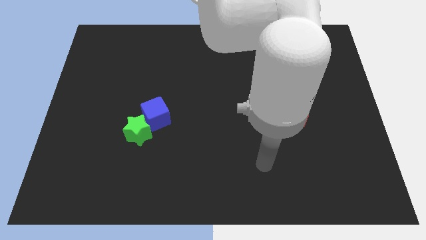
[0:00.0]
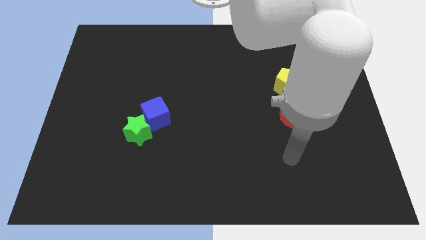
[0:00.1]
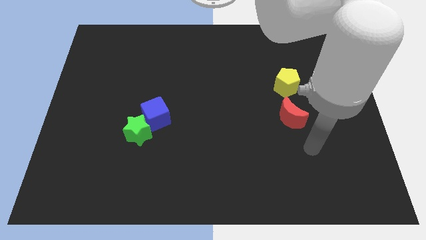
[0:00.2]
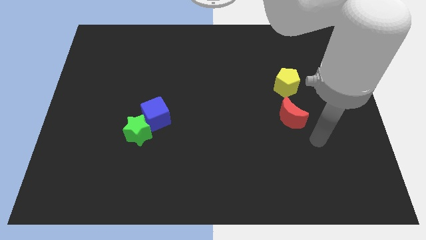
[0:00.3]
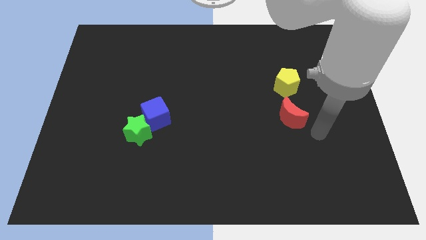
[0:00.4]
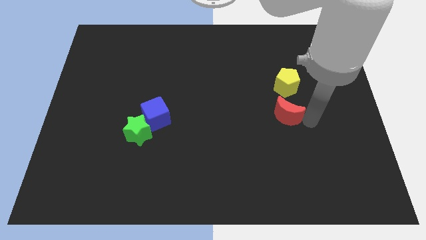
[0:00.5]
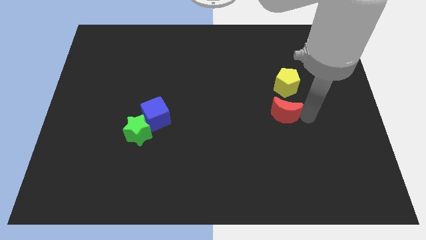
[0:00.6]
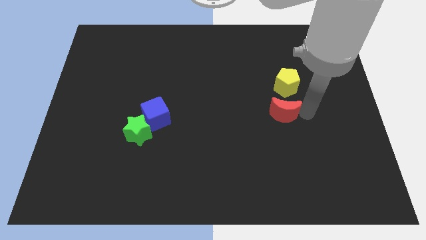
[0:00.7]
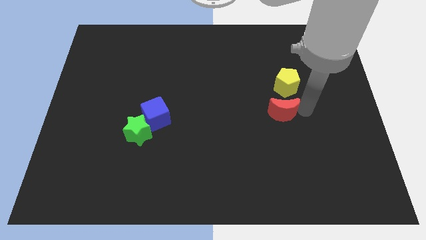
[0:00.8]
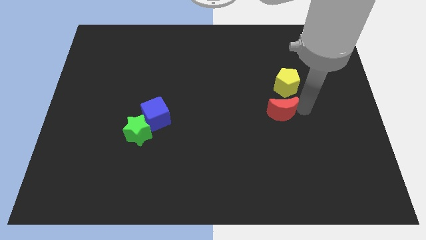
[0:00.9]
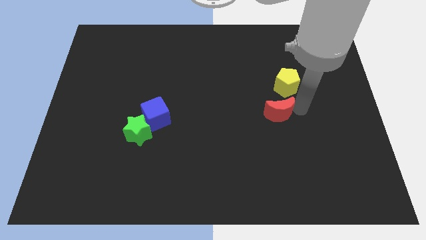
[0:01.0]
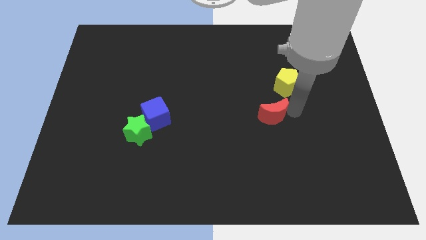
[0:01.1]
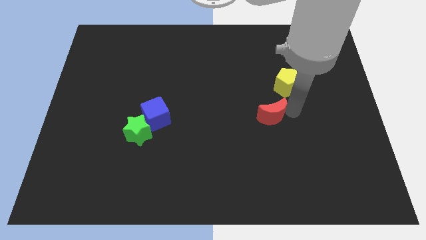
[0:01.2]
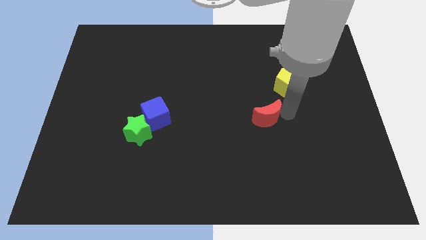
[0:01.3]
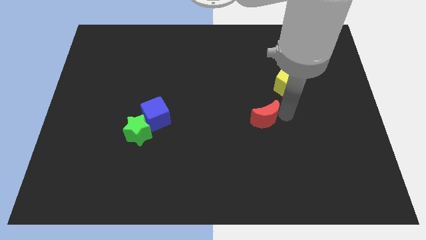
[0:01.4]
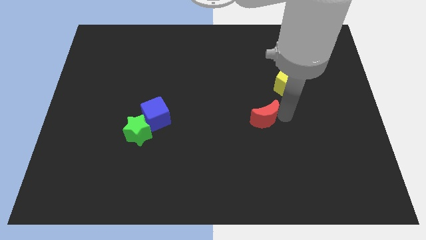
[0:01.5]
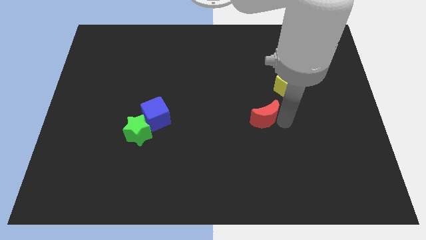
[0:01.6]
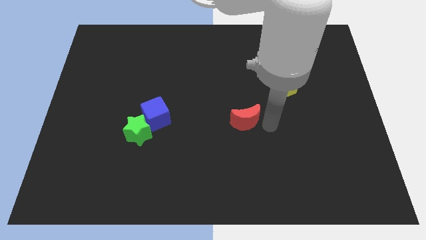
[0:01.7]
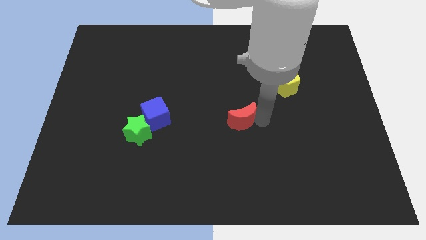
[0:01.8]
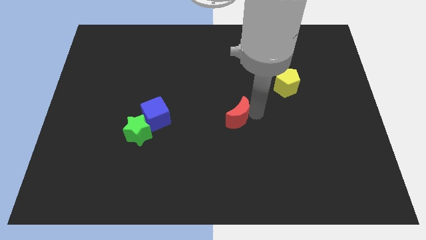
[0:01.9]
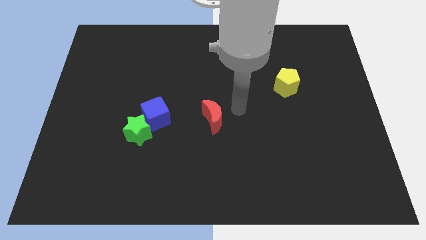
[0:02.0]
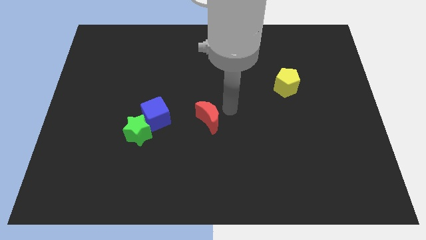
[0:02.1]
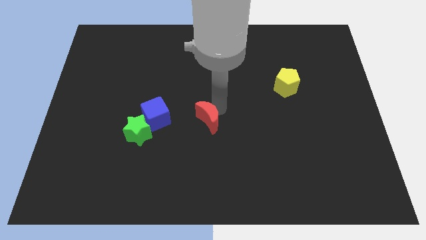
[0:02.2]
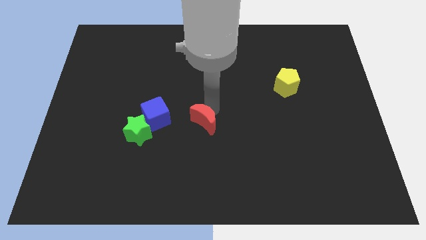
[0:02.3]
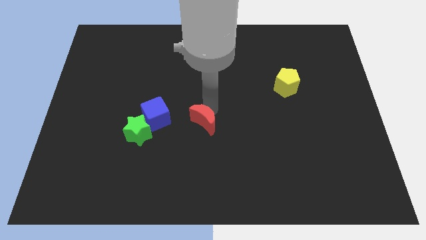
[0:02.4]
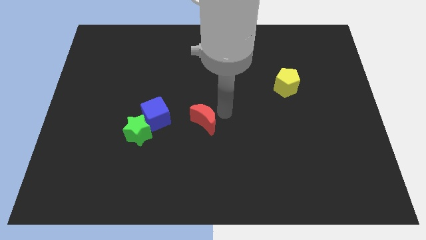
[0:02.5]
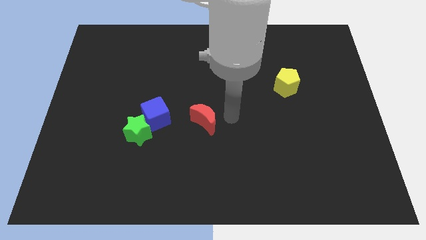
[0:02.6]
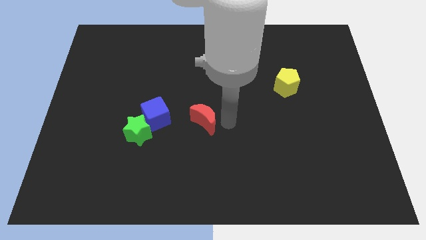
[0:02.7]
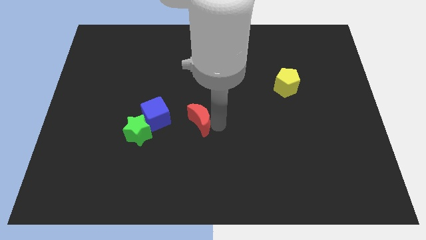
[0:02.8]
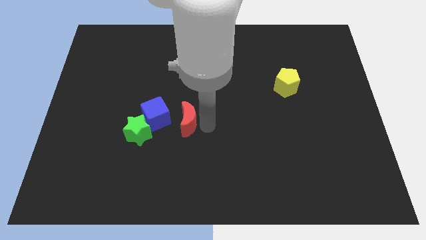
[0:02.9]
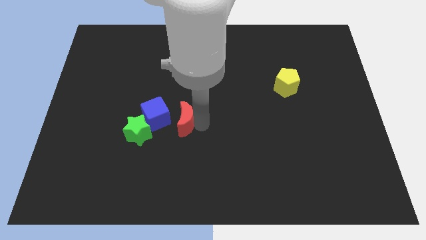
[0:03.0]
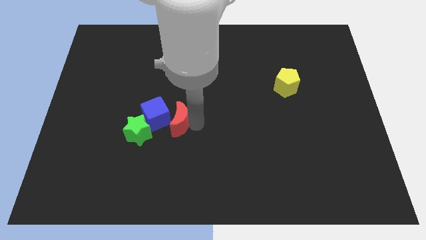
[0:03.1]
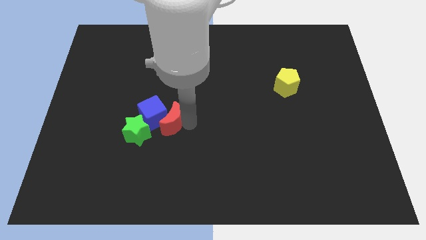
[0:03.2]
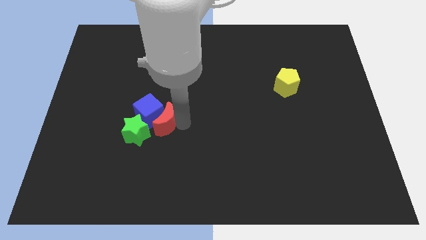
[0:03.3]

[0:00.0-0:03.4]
put the red moon to the cube

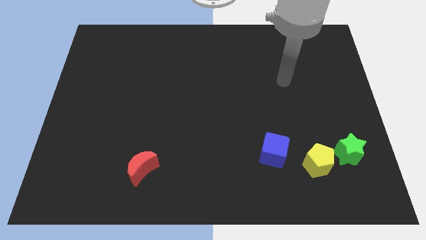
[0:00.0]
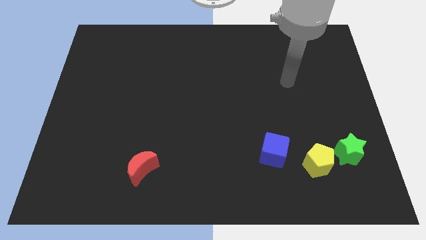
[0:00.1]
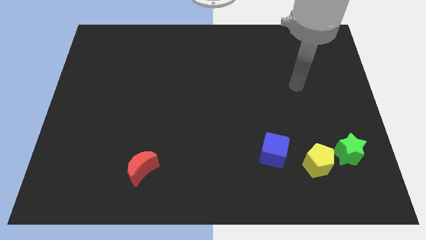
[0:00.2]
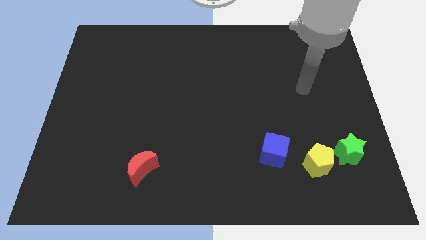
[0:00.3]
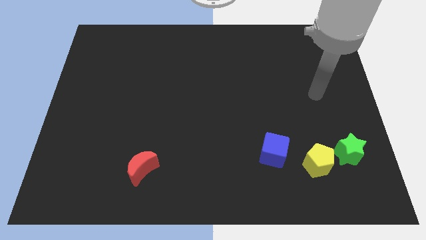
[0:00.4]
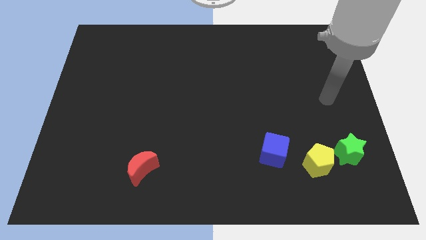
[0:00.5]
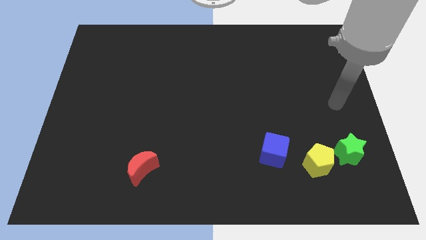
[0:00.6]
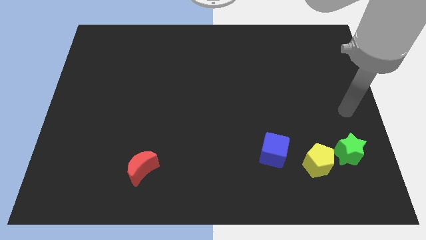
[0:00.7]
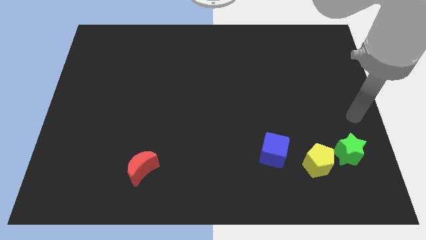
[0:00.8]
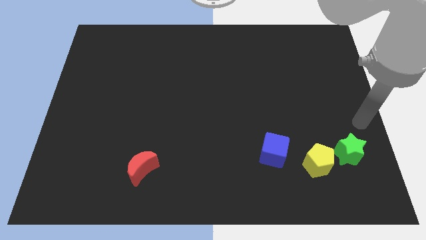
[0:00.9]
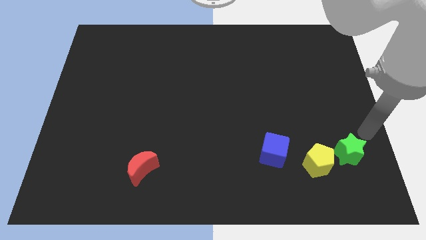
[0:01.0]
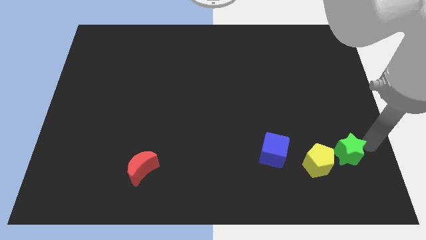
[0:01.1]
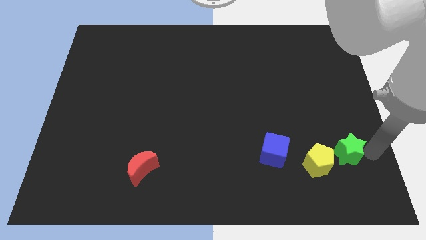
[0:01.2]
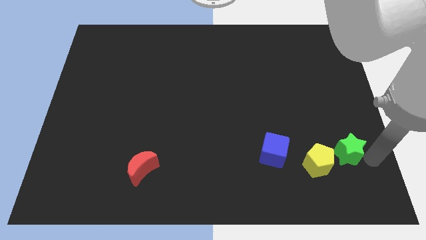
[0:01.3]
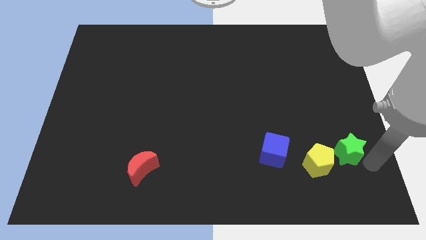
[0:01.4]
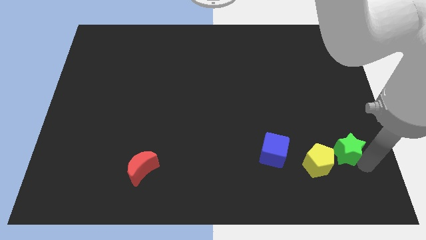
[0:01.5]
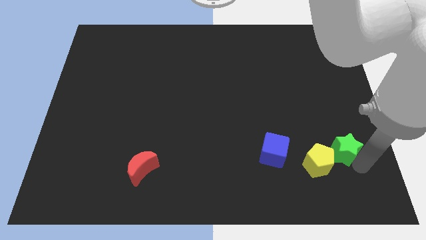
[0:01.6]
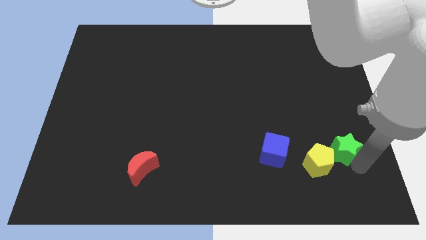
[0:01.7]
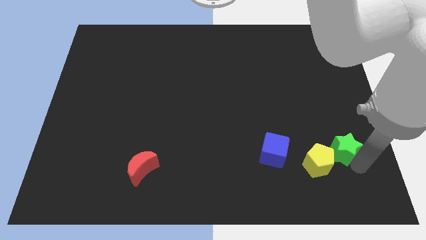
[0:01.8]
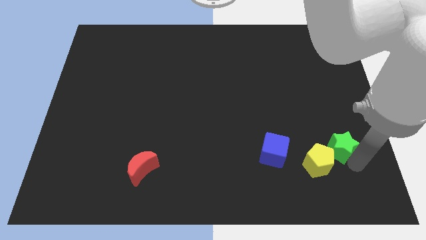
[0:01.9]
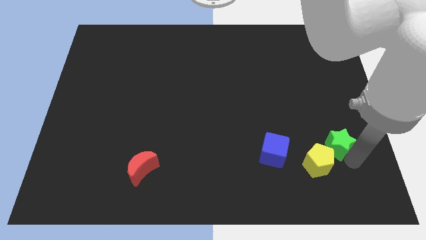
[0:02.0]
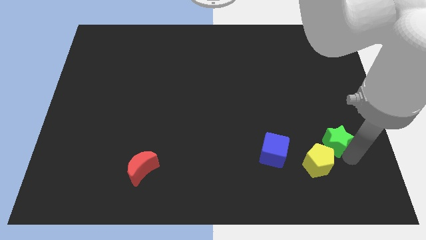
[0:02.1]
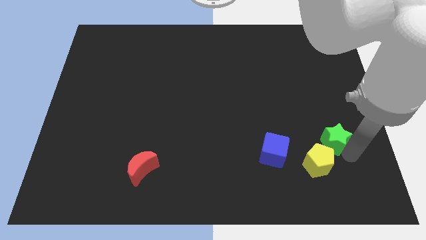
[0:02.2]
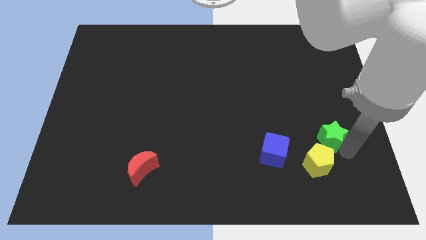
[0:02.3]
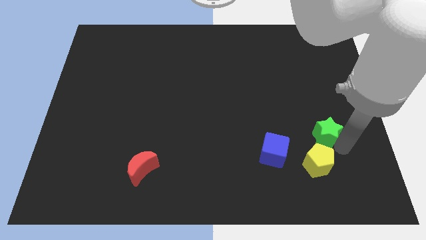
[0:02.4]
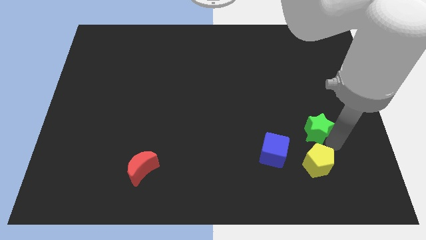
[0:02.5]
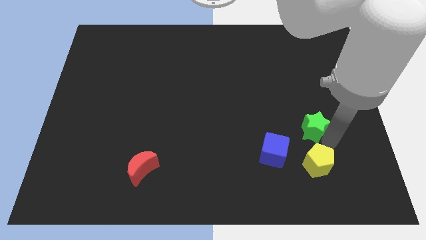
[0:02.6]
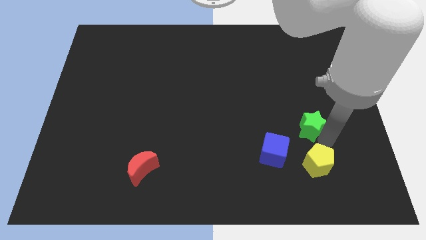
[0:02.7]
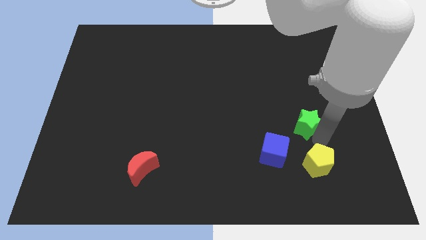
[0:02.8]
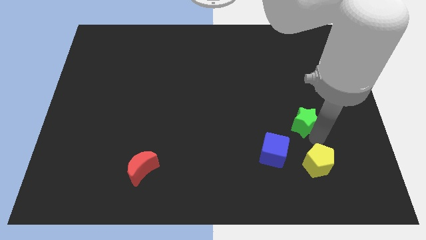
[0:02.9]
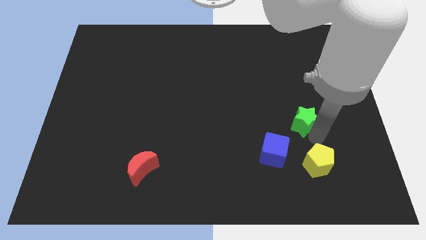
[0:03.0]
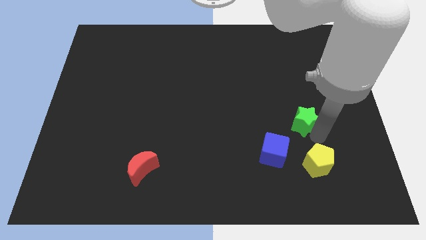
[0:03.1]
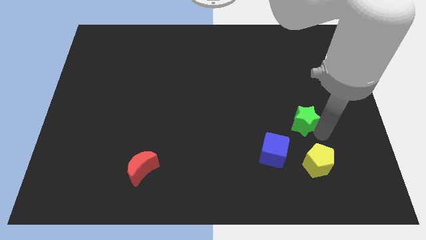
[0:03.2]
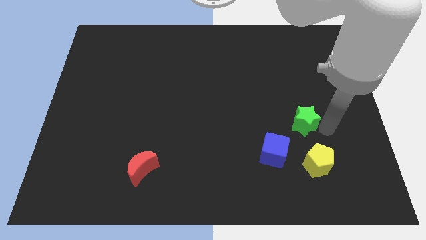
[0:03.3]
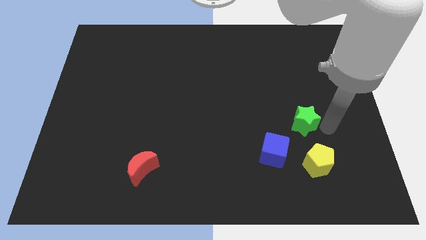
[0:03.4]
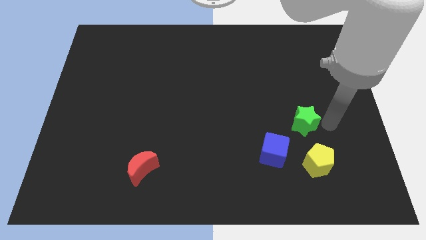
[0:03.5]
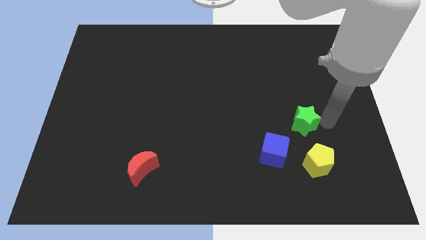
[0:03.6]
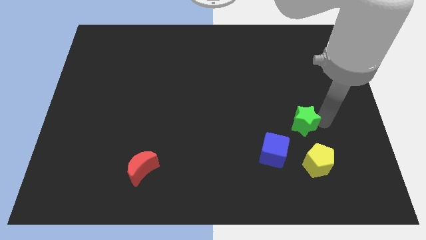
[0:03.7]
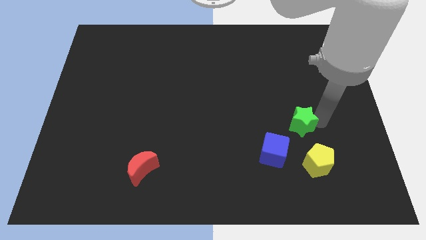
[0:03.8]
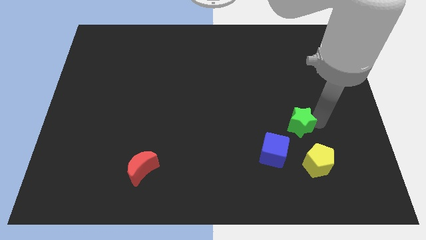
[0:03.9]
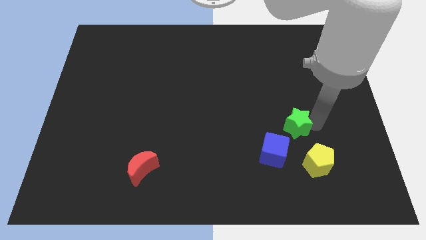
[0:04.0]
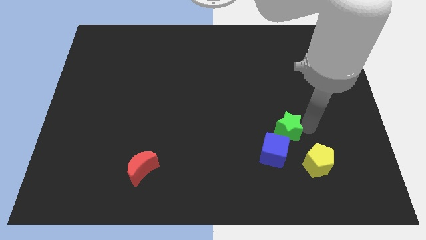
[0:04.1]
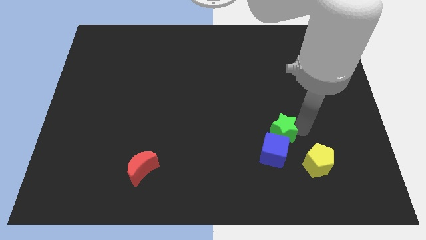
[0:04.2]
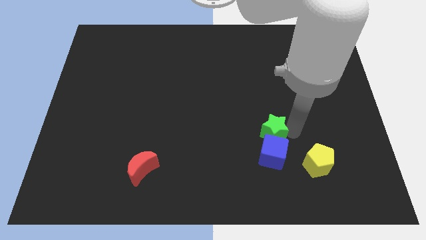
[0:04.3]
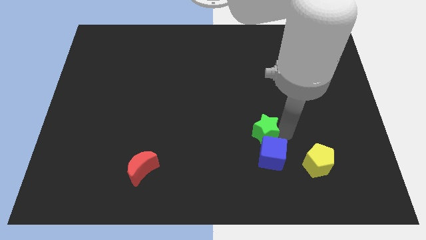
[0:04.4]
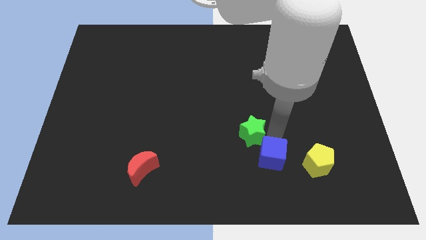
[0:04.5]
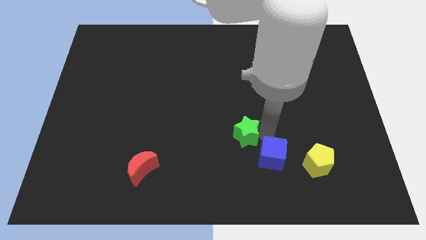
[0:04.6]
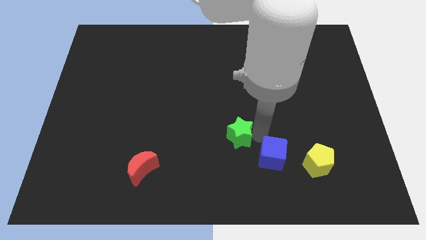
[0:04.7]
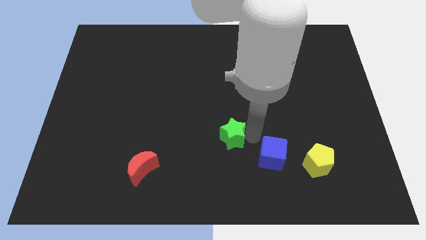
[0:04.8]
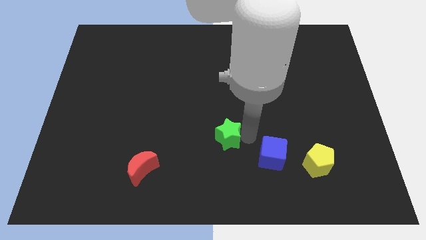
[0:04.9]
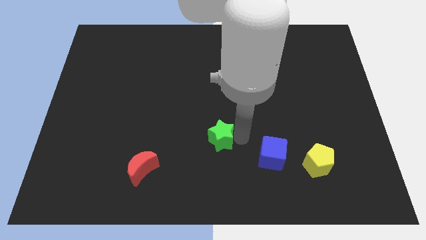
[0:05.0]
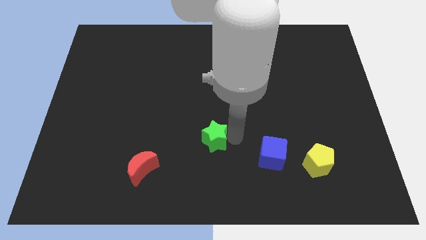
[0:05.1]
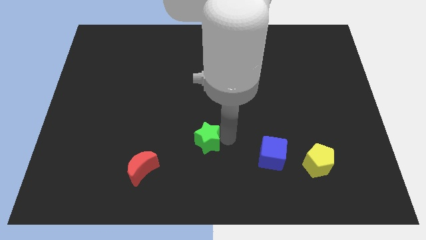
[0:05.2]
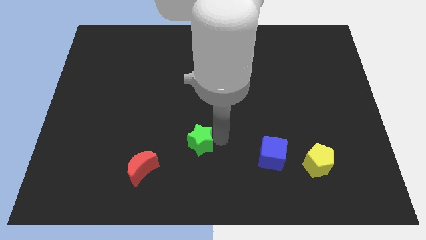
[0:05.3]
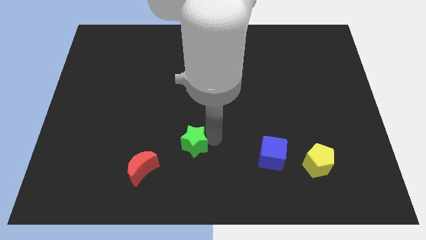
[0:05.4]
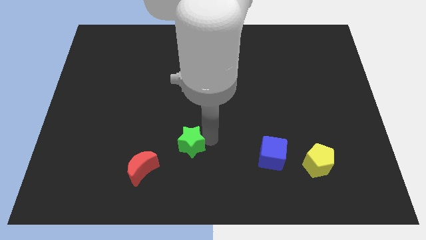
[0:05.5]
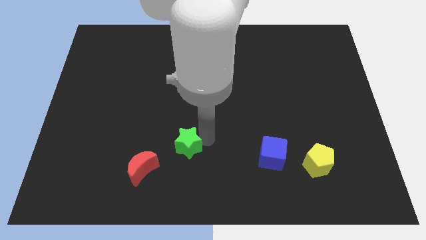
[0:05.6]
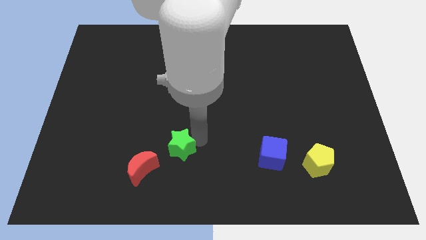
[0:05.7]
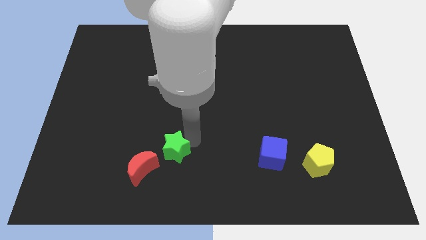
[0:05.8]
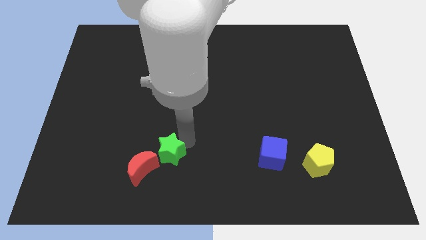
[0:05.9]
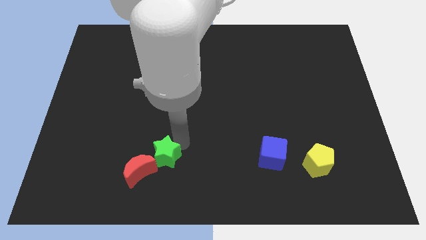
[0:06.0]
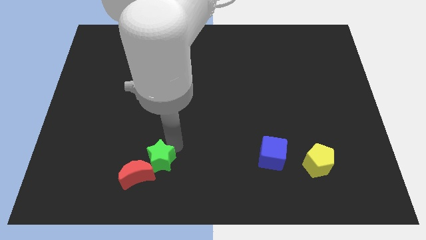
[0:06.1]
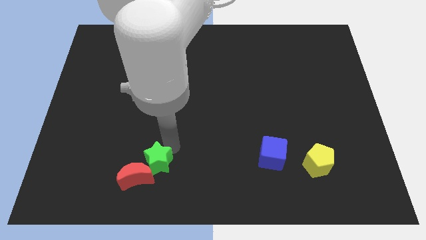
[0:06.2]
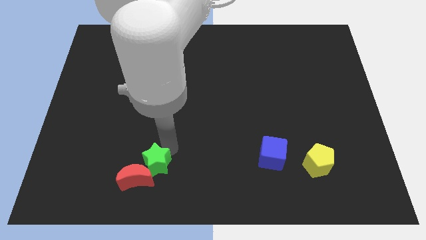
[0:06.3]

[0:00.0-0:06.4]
put the green block next to the red moon
